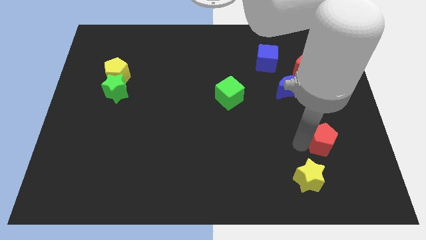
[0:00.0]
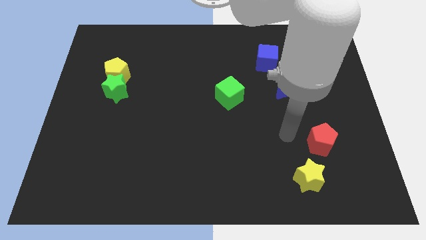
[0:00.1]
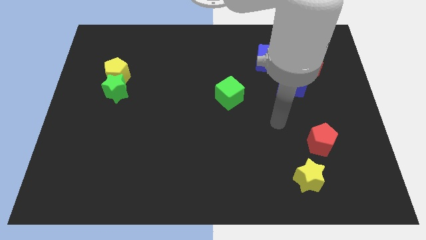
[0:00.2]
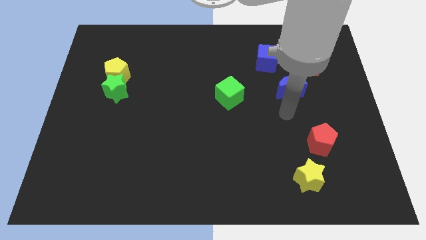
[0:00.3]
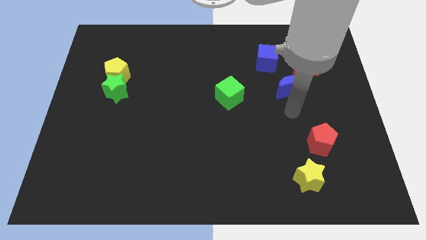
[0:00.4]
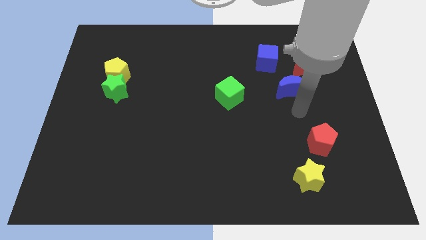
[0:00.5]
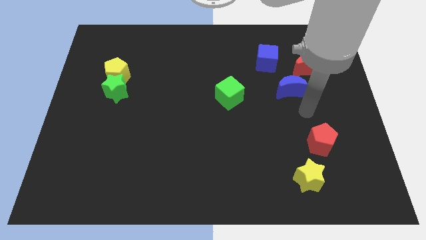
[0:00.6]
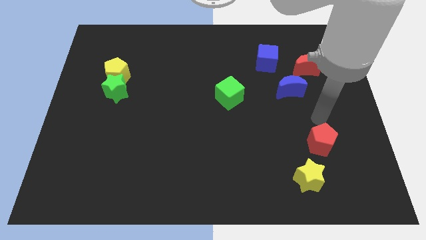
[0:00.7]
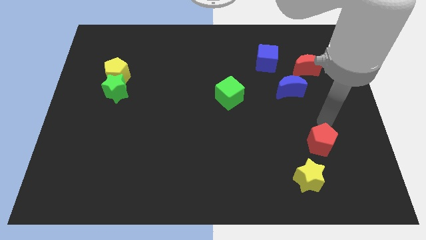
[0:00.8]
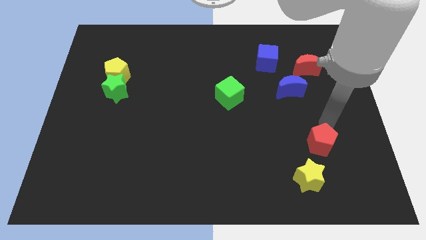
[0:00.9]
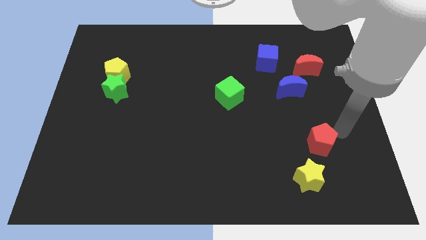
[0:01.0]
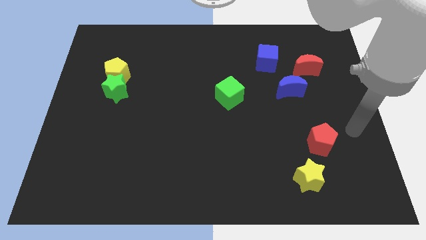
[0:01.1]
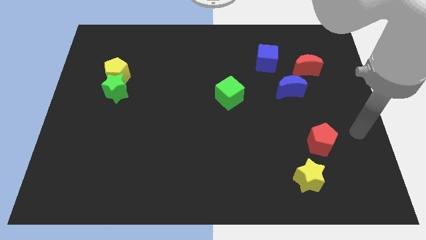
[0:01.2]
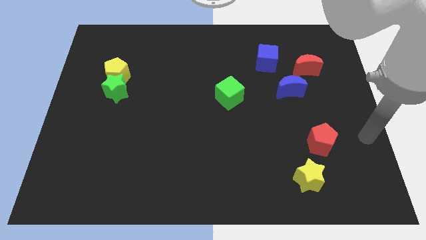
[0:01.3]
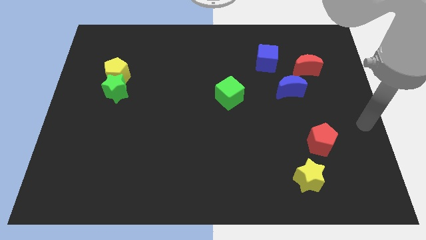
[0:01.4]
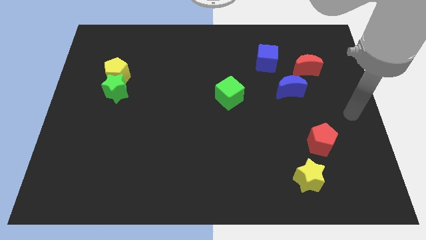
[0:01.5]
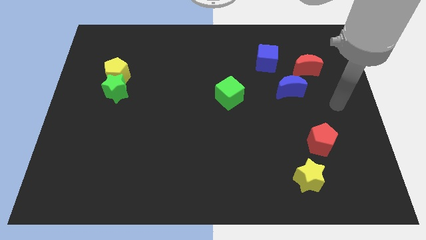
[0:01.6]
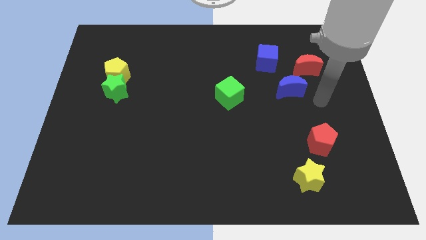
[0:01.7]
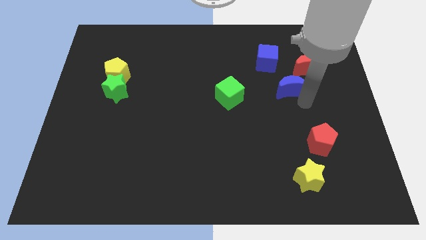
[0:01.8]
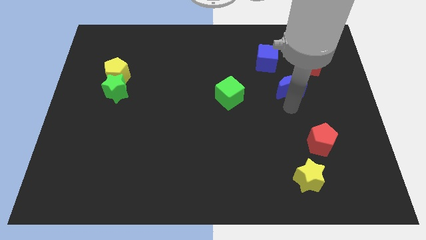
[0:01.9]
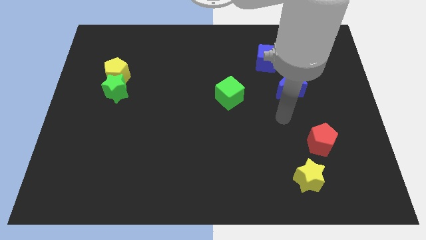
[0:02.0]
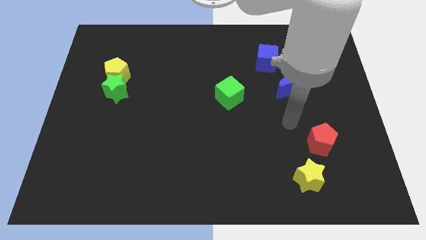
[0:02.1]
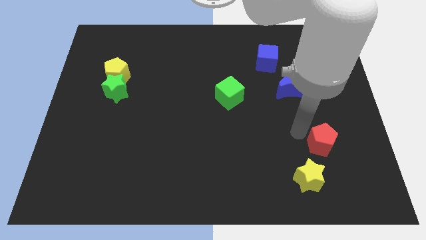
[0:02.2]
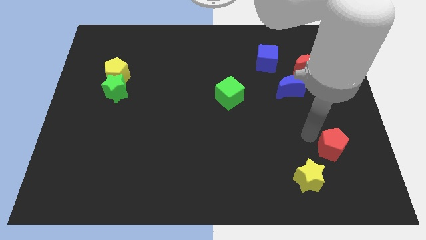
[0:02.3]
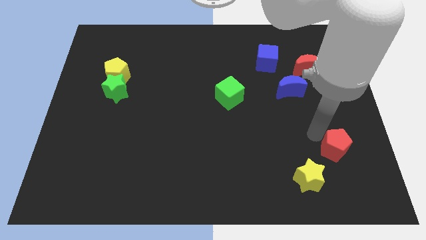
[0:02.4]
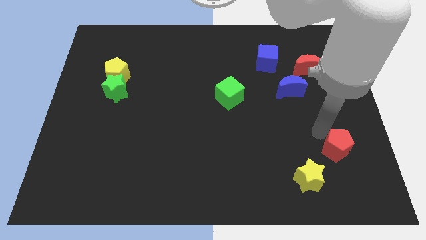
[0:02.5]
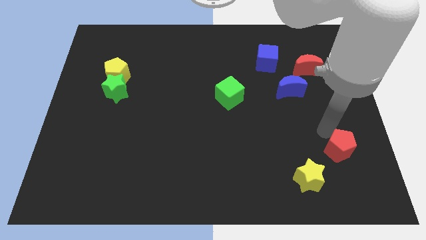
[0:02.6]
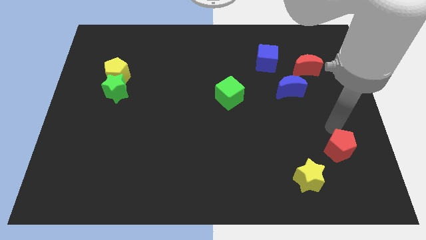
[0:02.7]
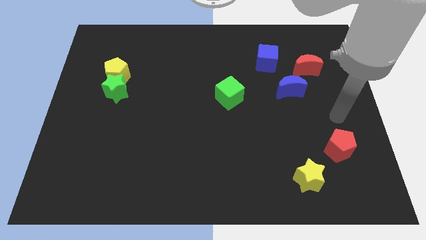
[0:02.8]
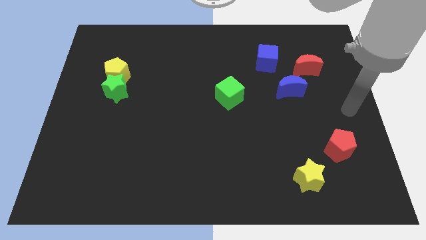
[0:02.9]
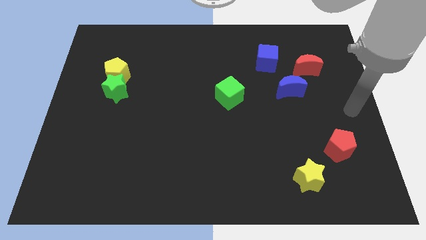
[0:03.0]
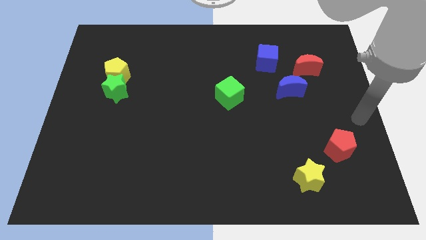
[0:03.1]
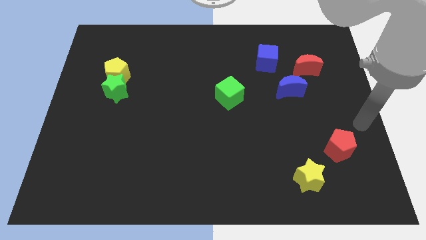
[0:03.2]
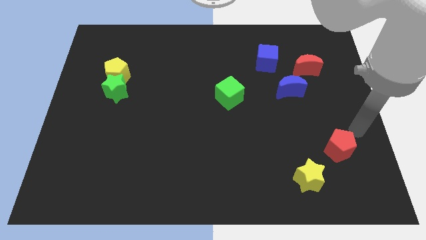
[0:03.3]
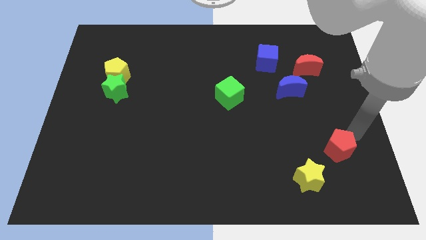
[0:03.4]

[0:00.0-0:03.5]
push the red pentagon towards the right side of the board

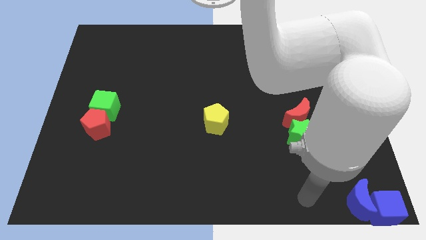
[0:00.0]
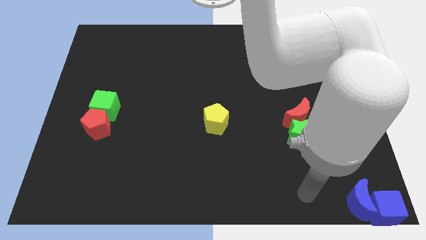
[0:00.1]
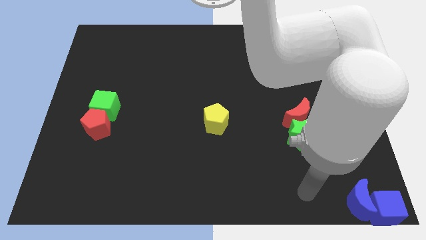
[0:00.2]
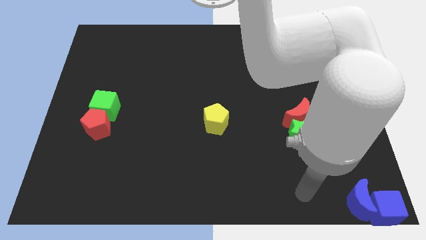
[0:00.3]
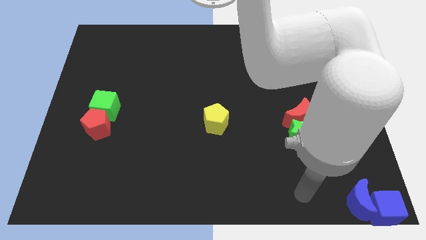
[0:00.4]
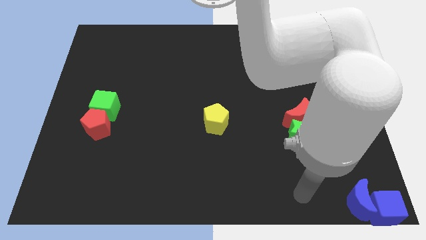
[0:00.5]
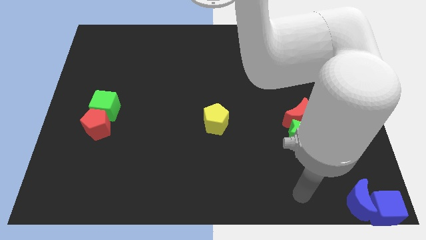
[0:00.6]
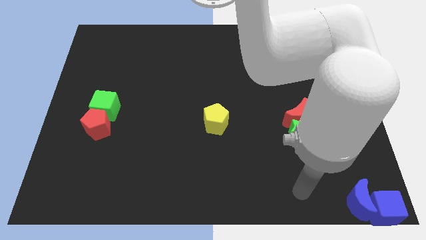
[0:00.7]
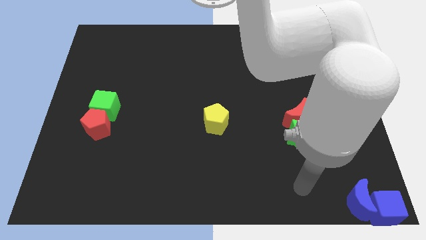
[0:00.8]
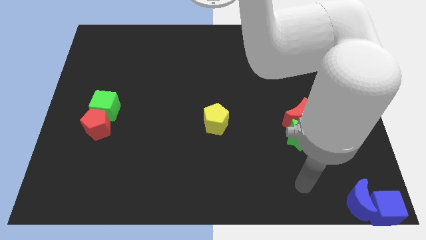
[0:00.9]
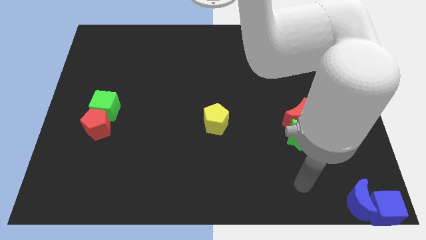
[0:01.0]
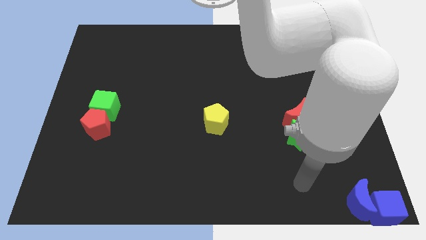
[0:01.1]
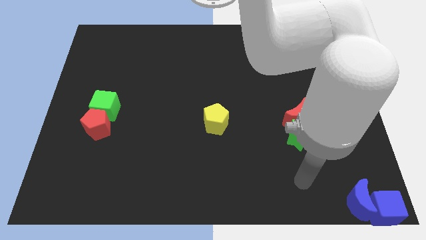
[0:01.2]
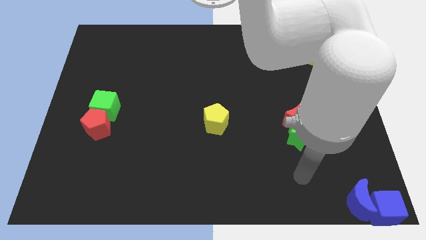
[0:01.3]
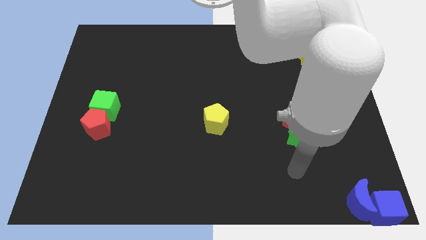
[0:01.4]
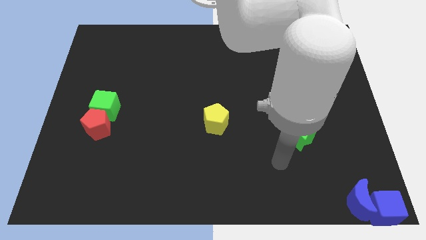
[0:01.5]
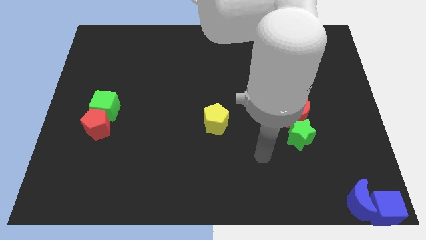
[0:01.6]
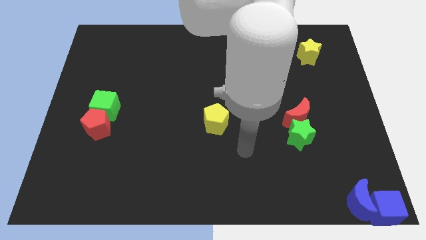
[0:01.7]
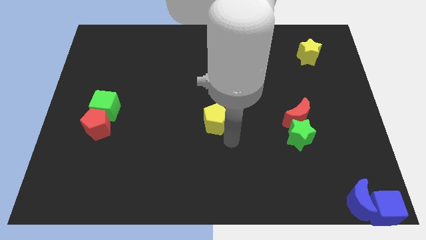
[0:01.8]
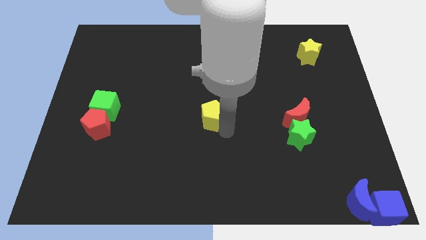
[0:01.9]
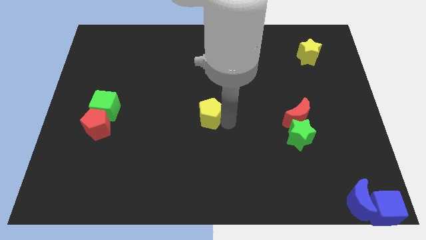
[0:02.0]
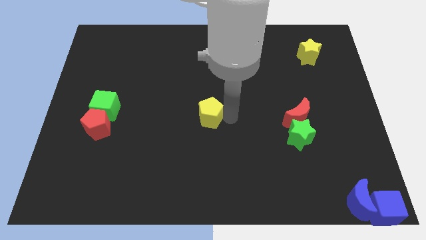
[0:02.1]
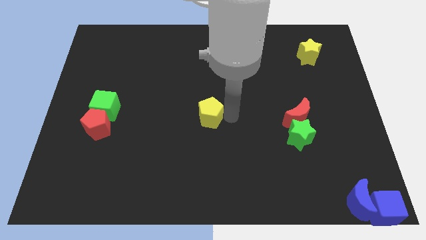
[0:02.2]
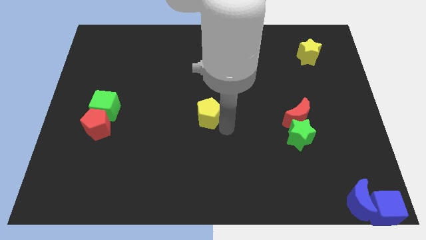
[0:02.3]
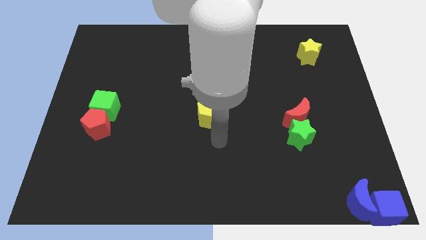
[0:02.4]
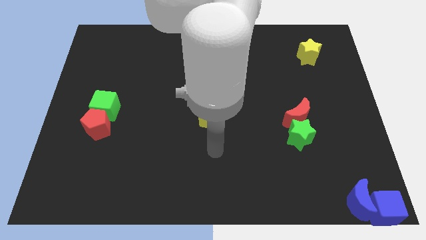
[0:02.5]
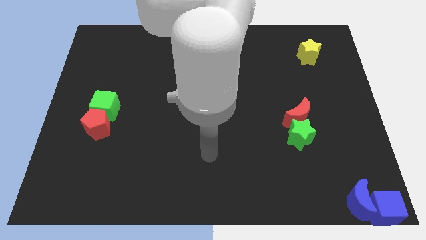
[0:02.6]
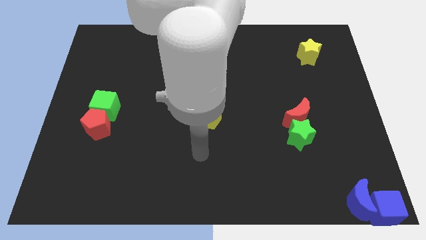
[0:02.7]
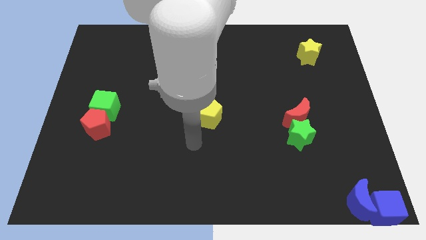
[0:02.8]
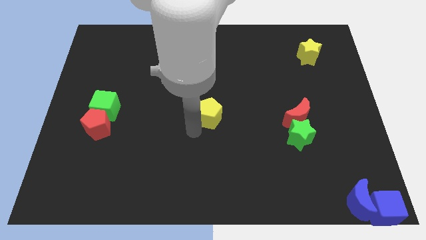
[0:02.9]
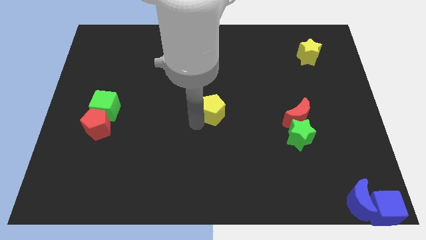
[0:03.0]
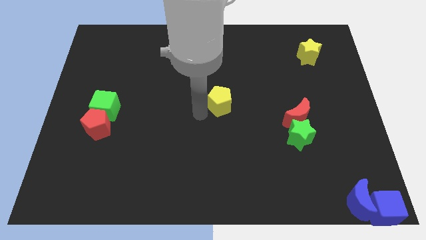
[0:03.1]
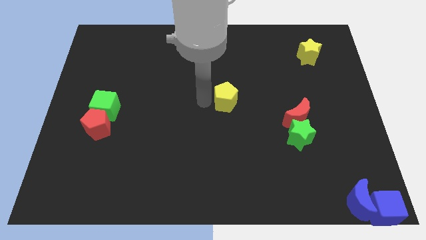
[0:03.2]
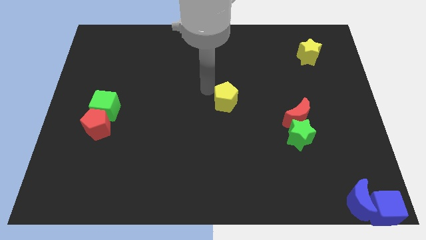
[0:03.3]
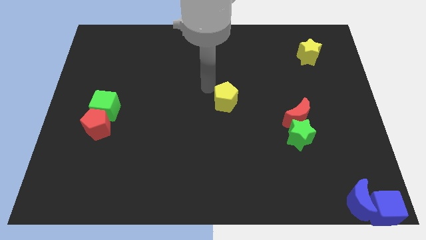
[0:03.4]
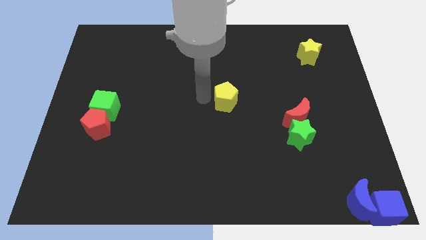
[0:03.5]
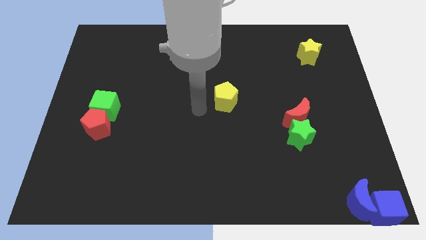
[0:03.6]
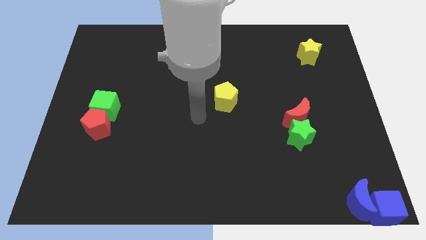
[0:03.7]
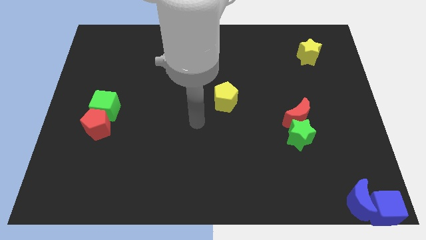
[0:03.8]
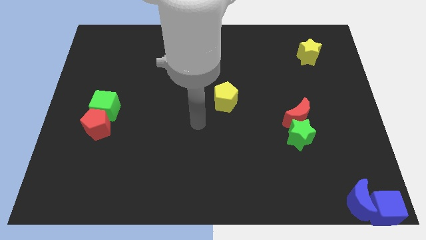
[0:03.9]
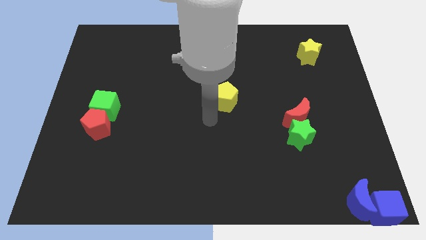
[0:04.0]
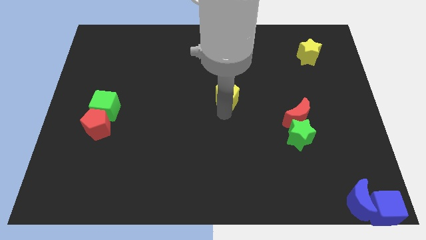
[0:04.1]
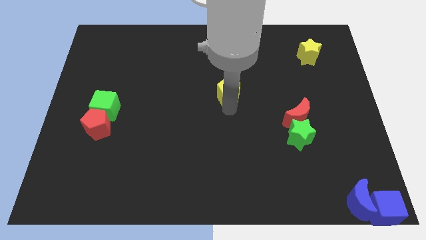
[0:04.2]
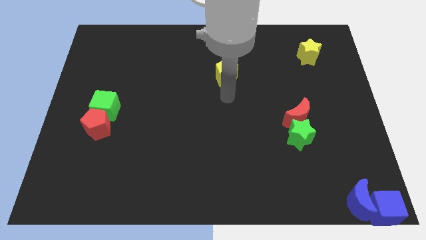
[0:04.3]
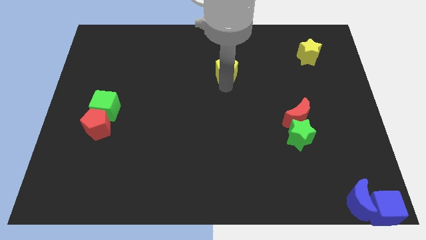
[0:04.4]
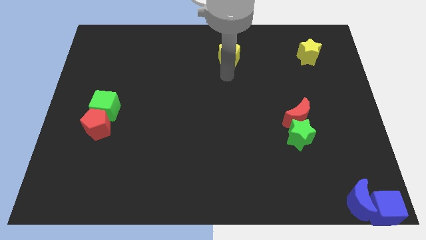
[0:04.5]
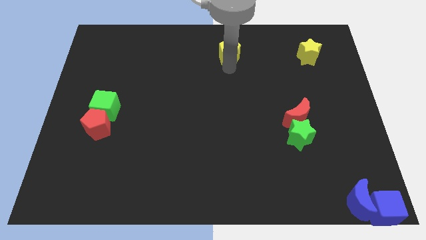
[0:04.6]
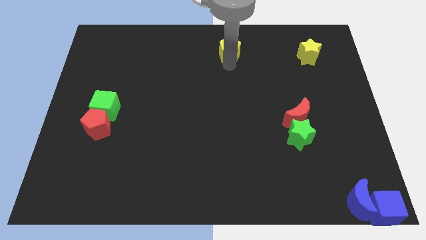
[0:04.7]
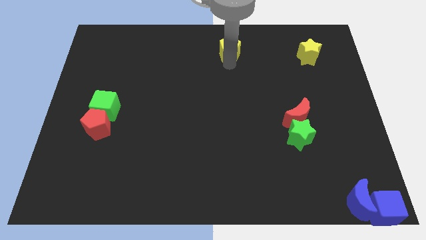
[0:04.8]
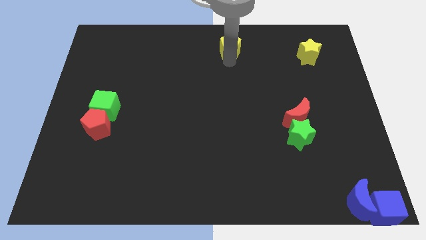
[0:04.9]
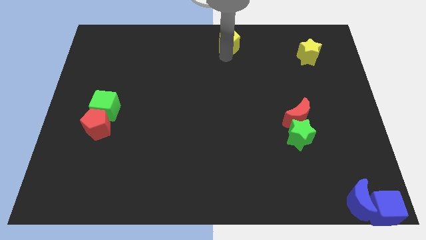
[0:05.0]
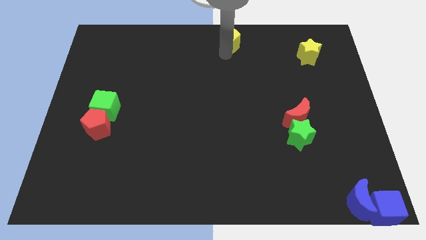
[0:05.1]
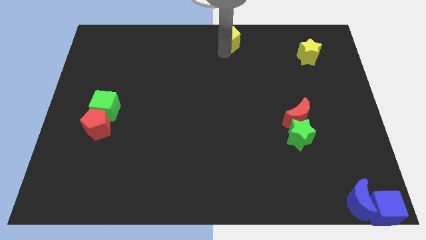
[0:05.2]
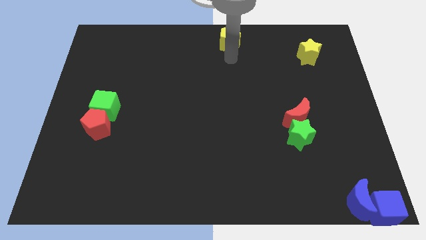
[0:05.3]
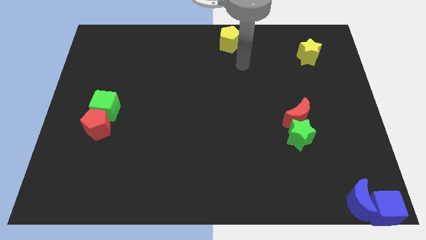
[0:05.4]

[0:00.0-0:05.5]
place the yellow pentagon at the top center

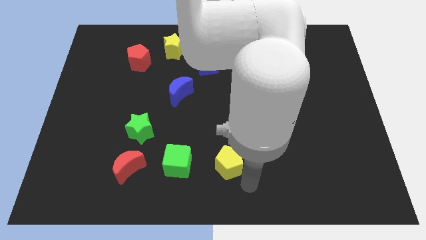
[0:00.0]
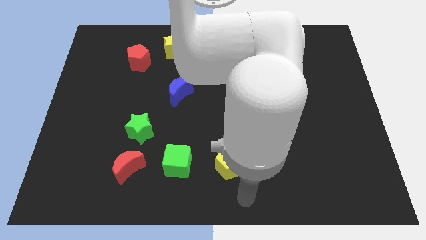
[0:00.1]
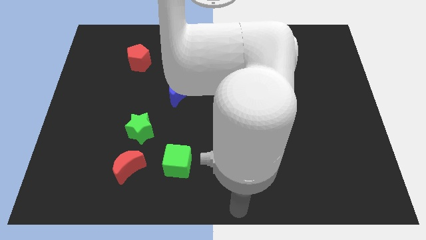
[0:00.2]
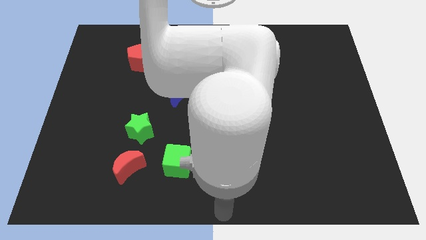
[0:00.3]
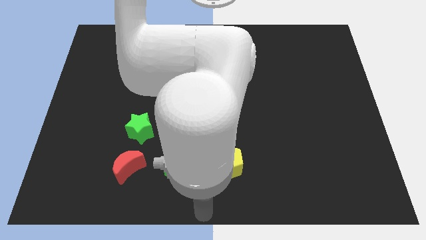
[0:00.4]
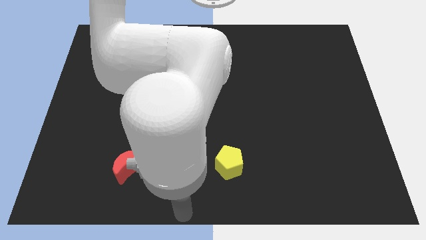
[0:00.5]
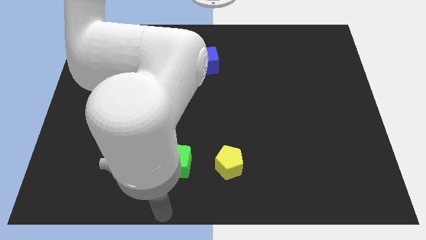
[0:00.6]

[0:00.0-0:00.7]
point your arm at the bottom of green cube
